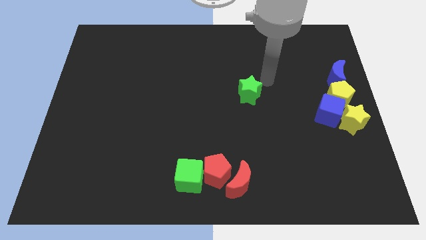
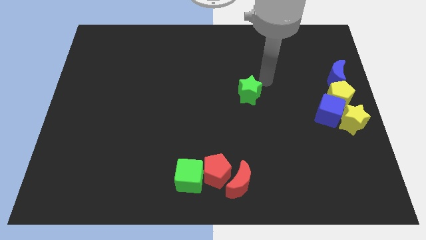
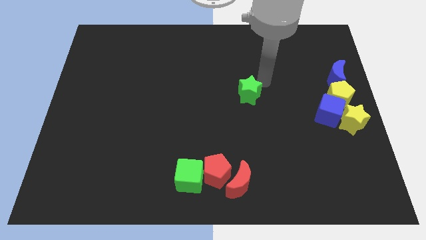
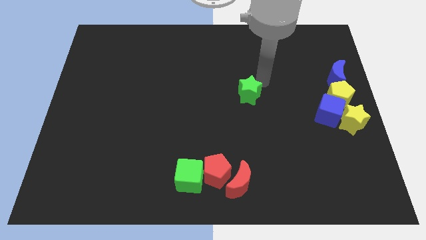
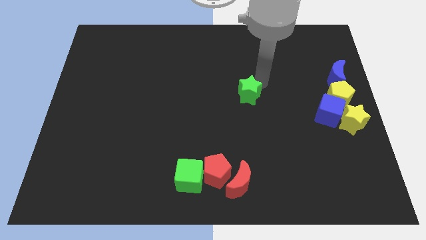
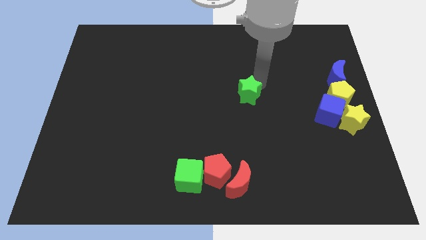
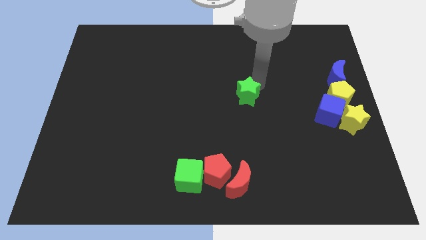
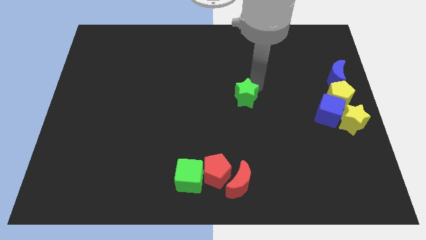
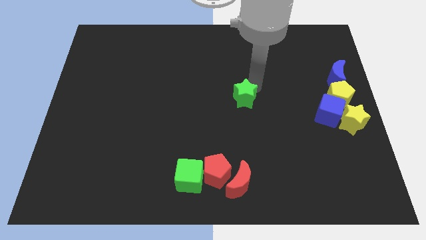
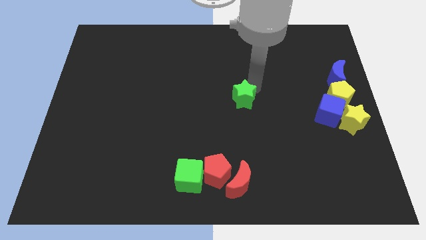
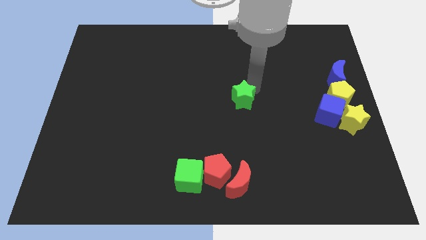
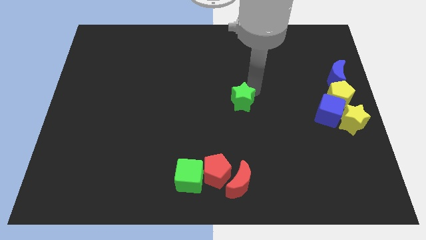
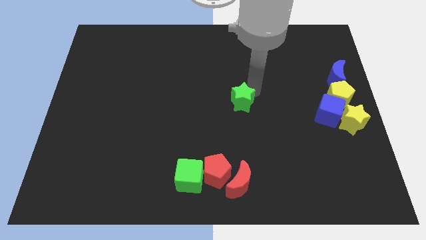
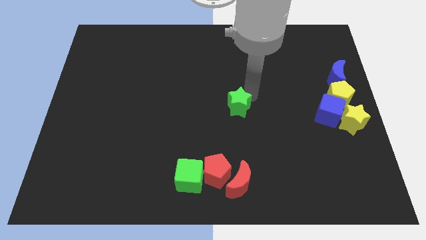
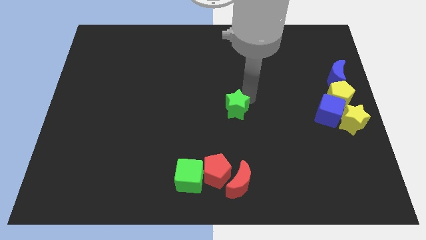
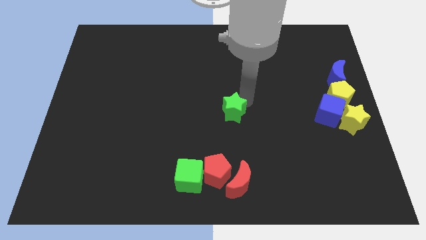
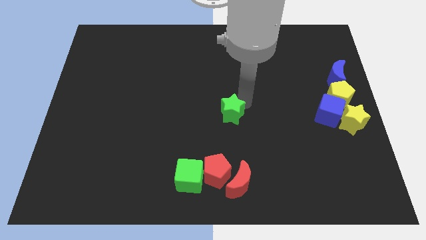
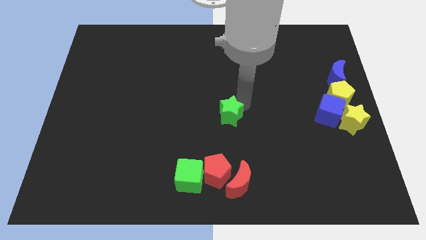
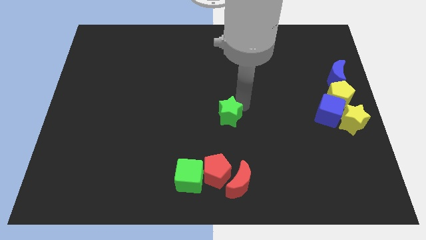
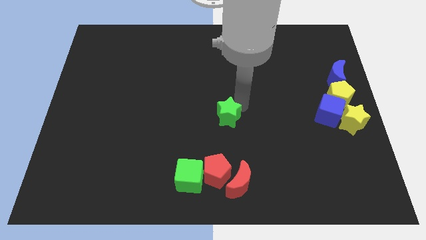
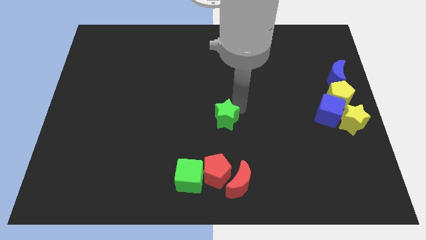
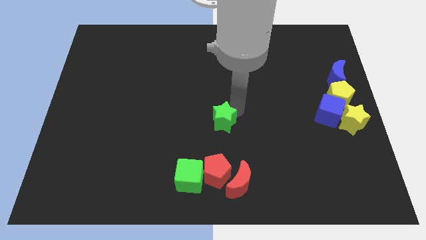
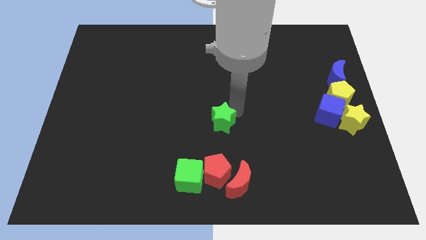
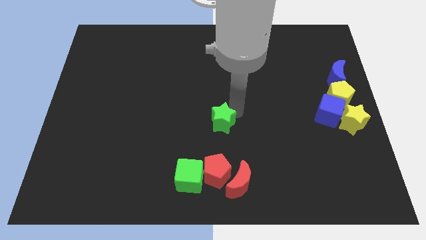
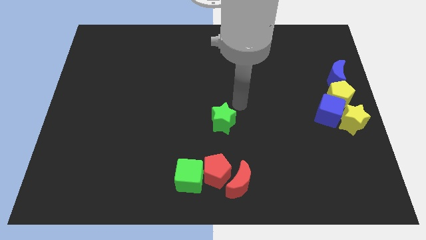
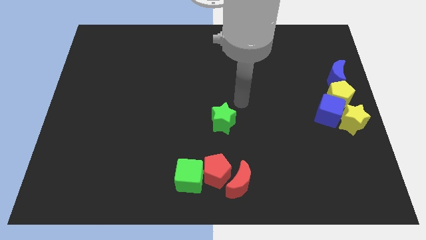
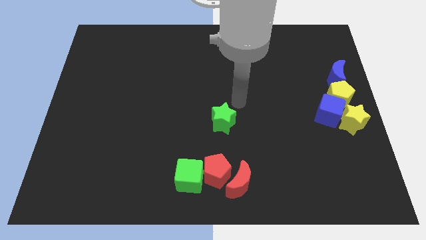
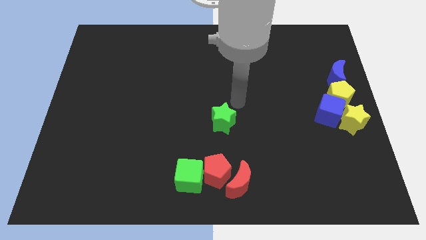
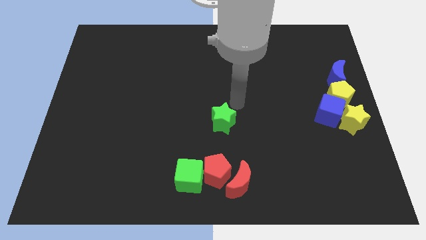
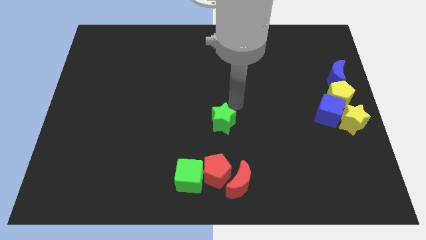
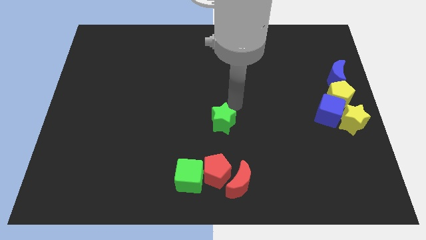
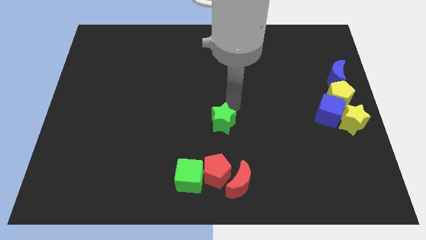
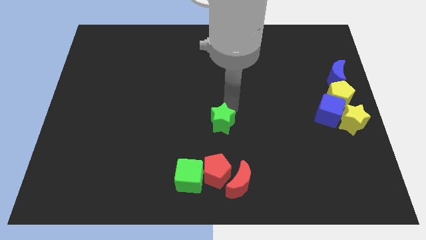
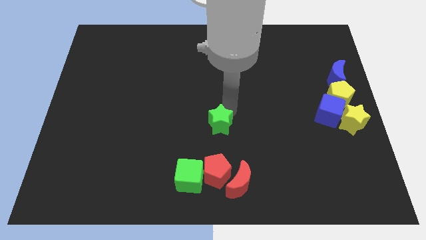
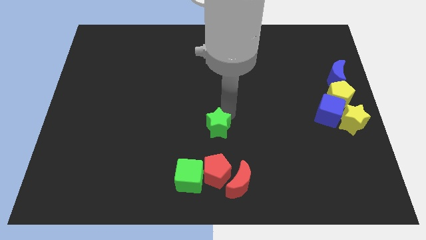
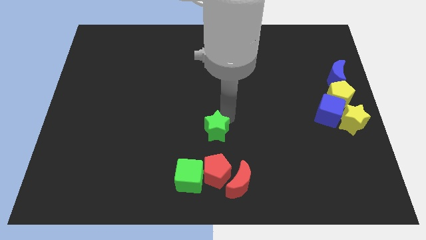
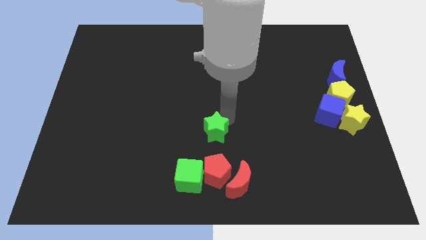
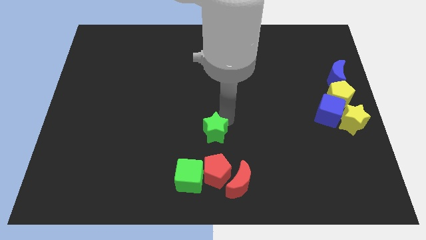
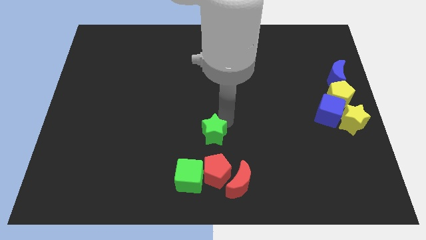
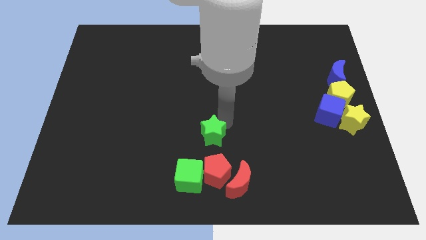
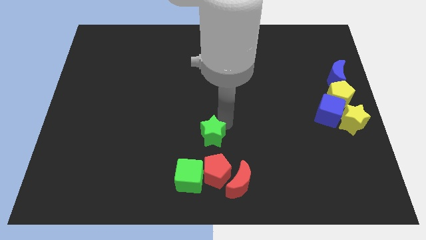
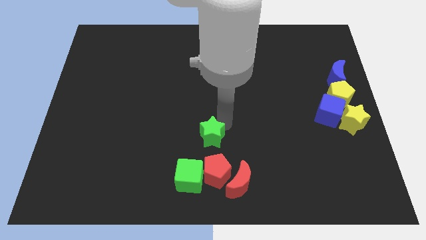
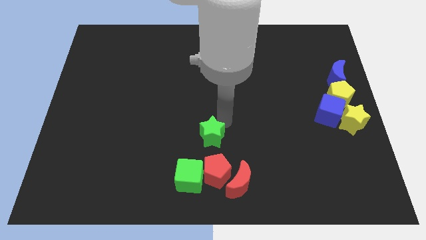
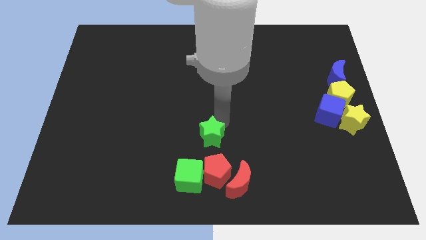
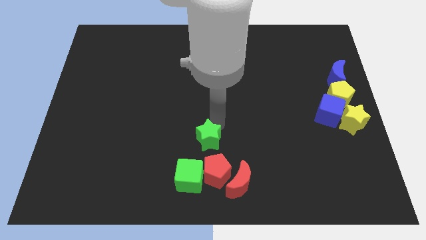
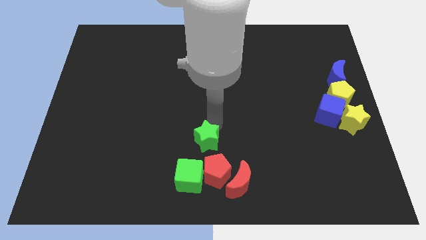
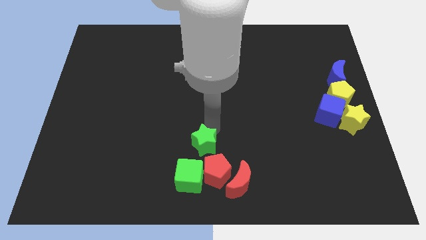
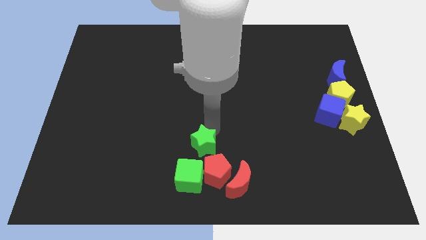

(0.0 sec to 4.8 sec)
place the green star above the red pentagon

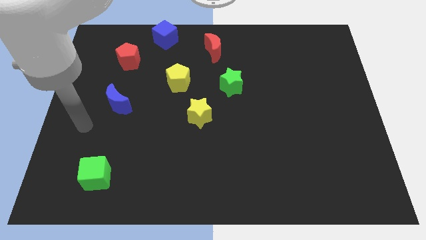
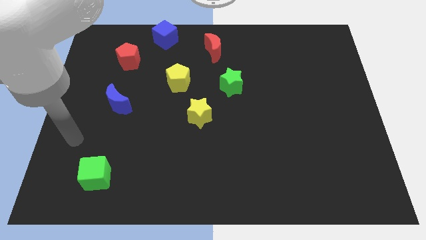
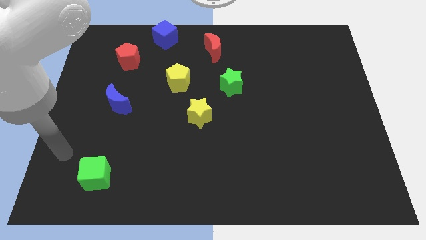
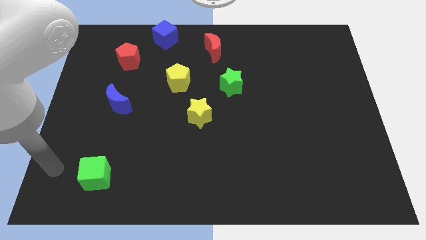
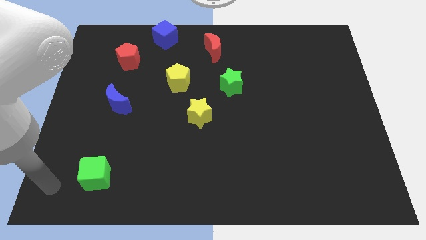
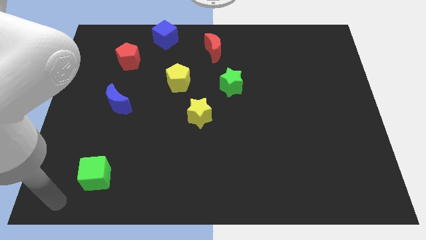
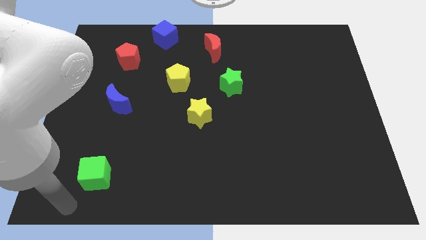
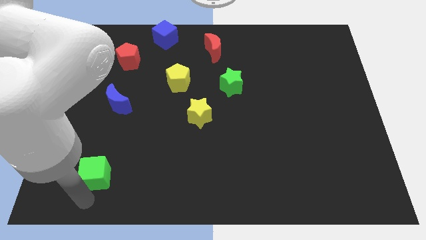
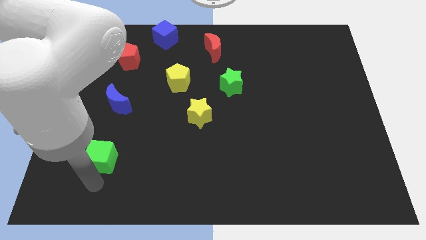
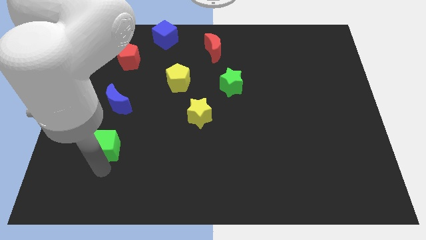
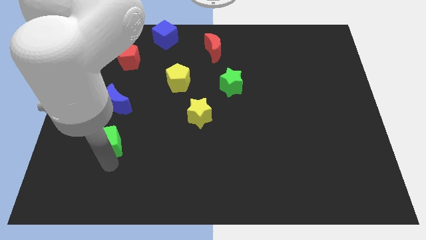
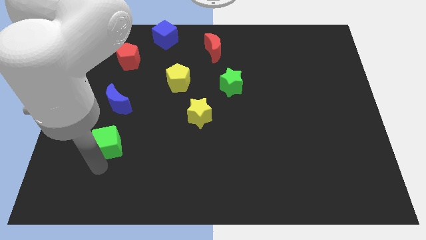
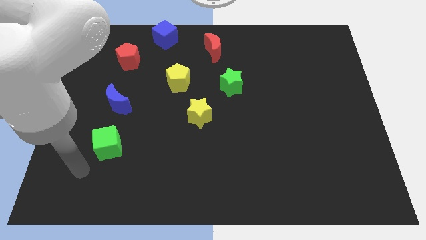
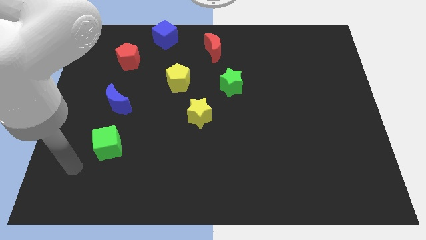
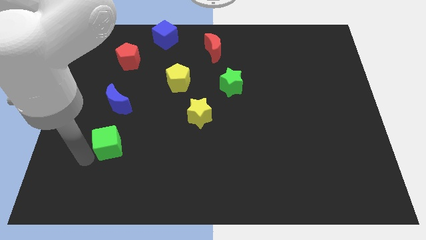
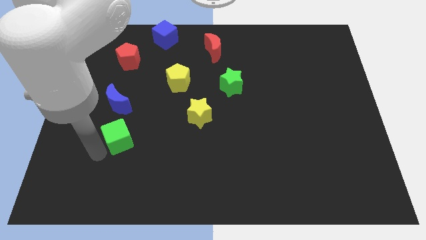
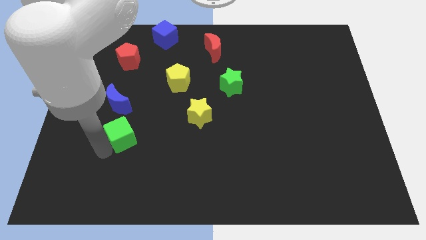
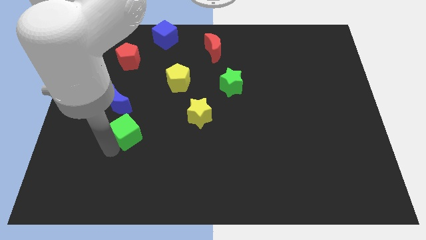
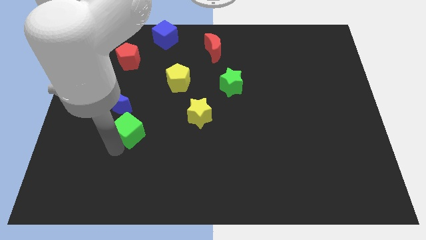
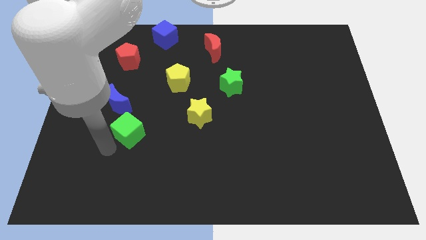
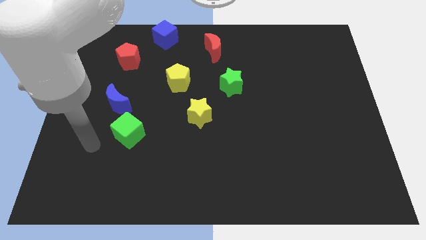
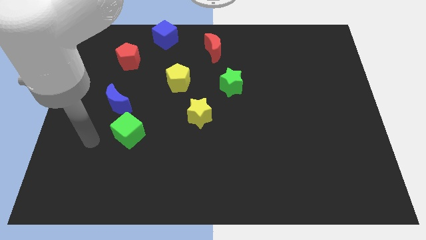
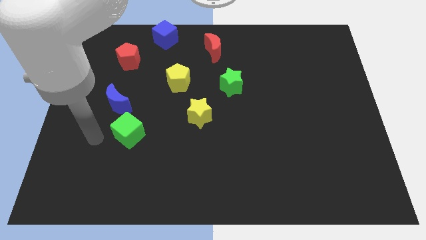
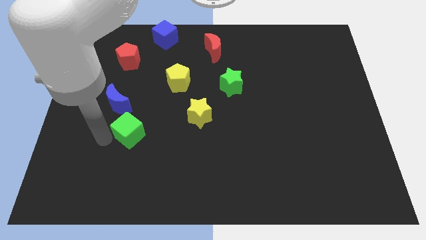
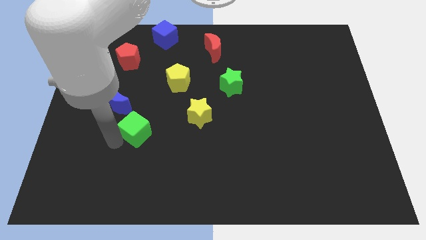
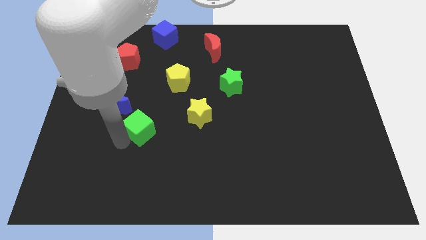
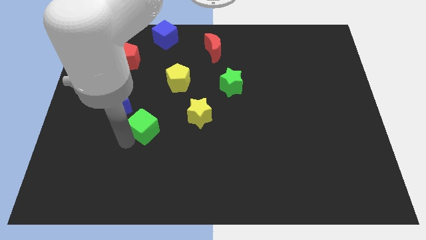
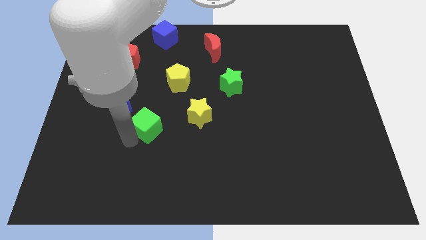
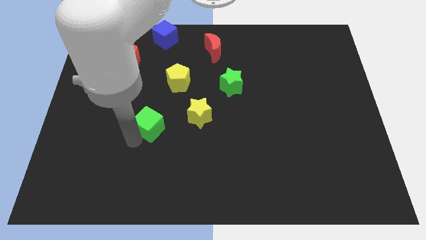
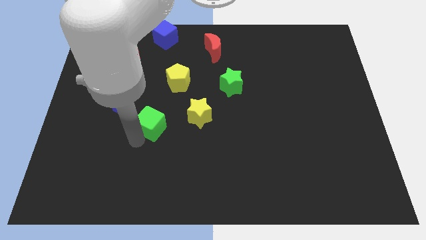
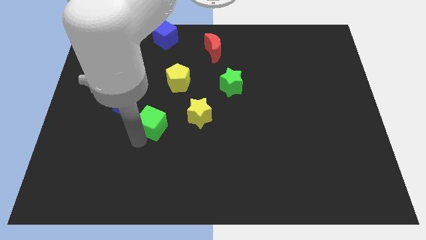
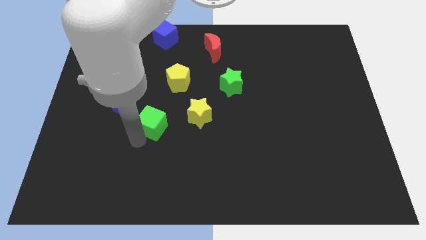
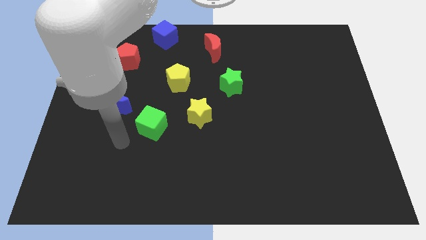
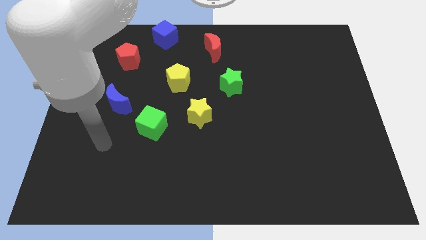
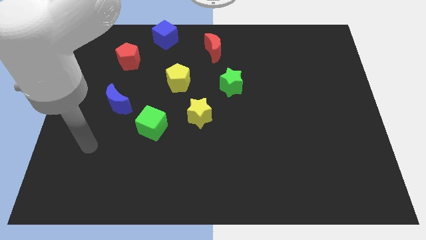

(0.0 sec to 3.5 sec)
push the green cube towards the left side of the yellow star

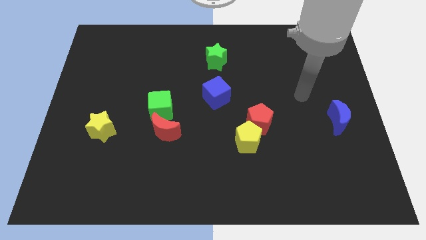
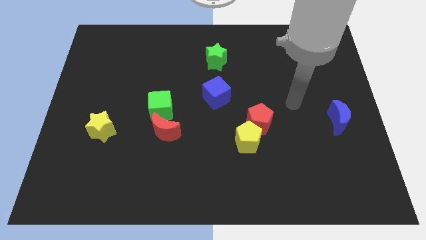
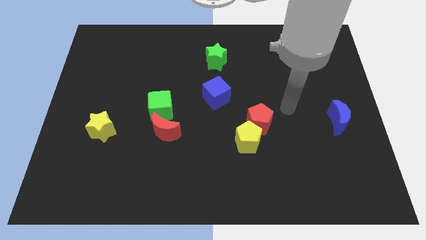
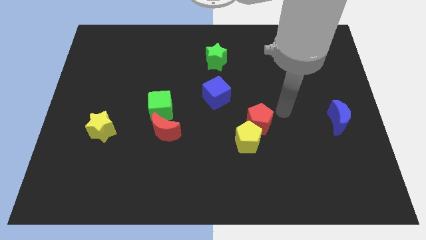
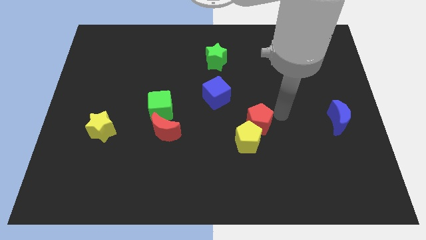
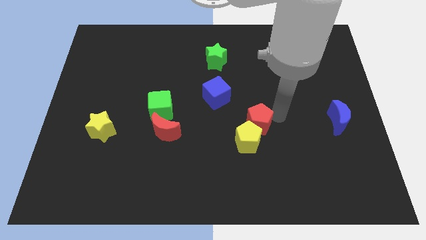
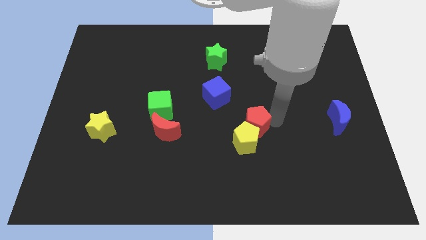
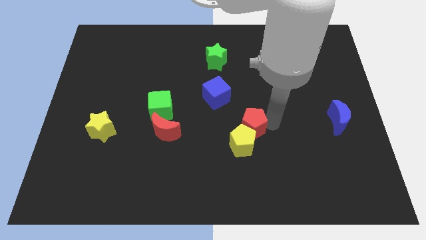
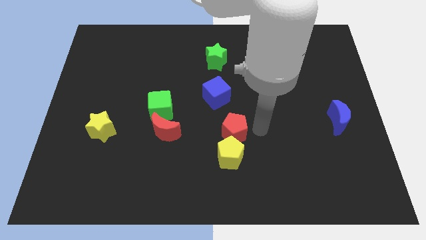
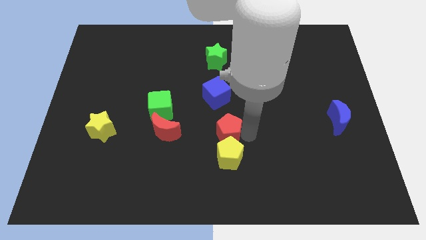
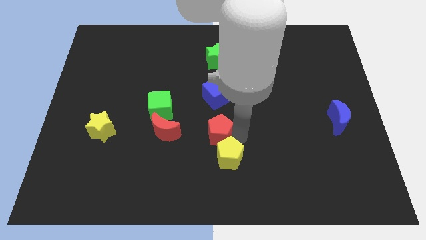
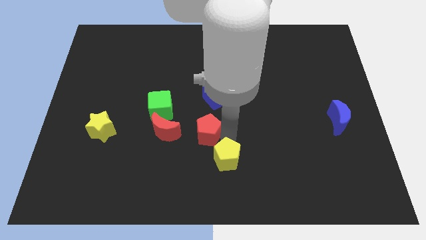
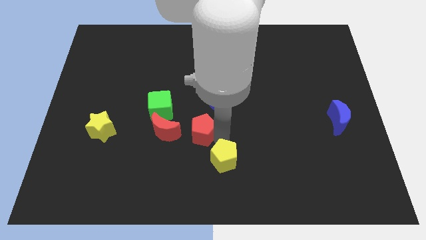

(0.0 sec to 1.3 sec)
separate the red pentagon away from the yellow pentagon
